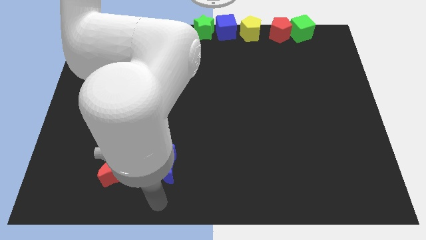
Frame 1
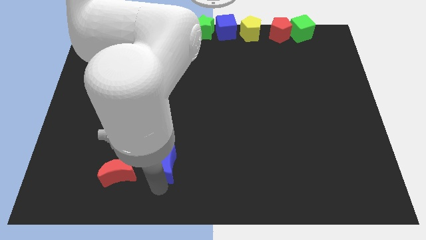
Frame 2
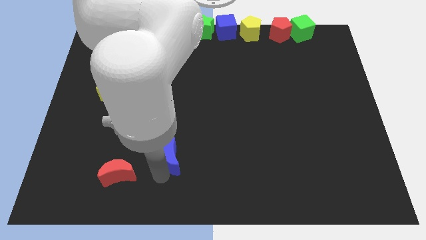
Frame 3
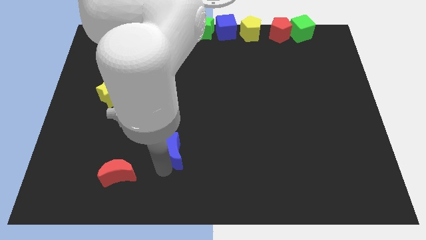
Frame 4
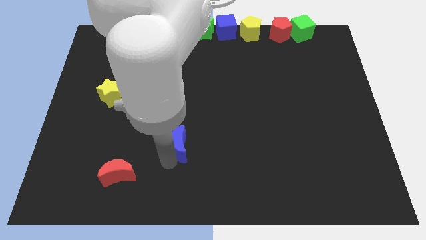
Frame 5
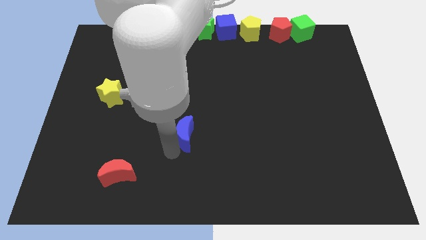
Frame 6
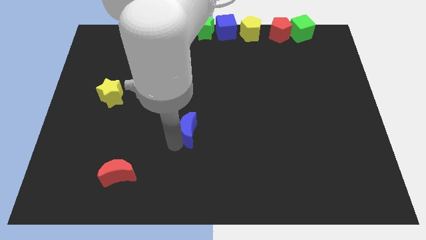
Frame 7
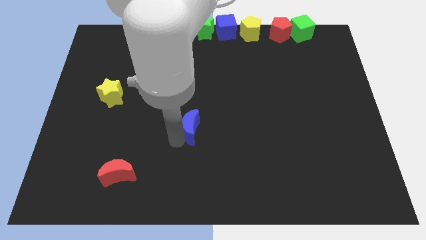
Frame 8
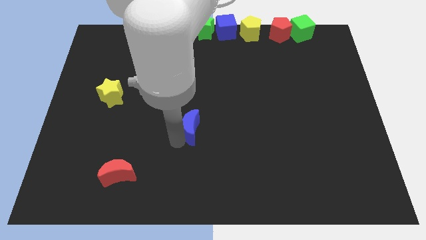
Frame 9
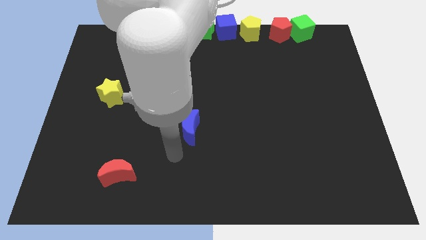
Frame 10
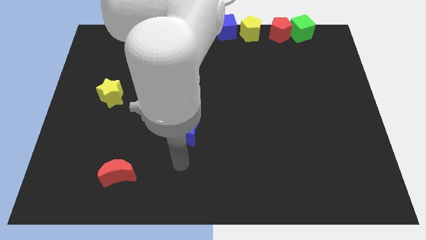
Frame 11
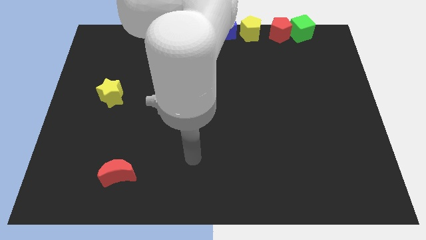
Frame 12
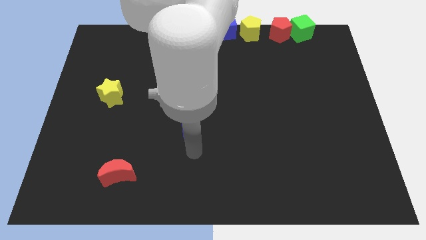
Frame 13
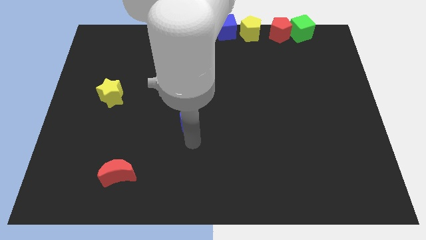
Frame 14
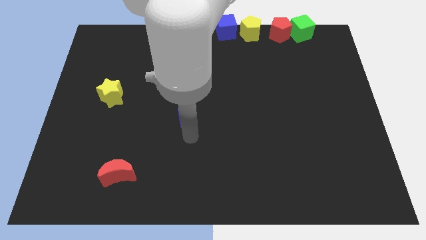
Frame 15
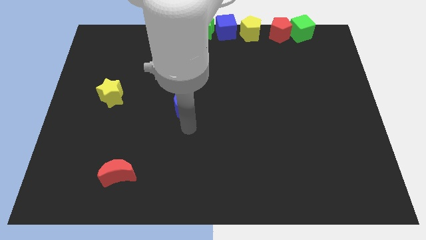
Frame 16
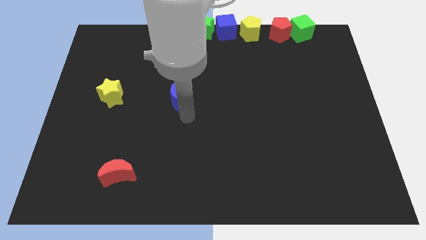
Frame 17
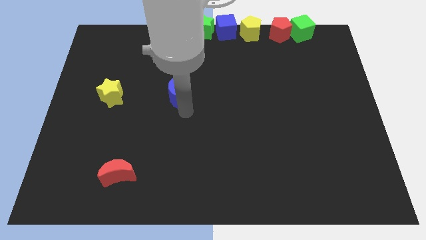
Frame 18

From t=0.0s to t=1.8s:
push the blue moon to the horizontal right of the yellow star

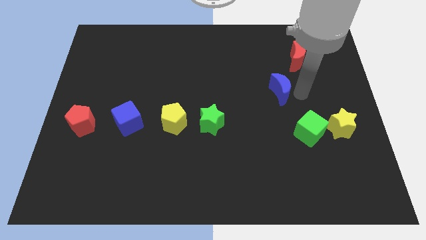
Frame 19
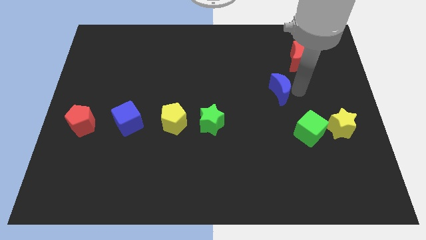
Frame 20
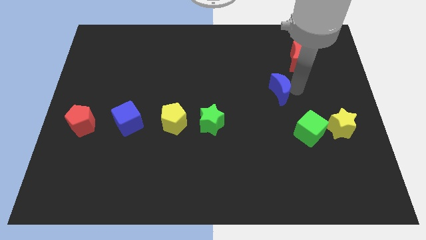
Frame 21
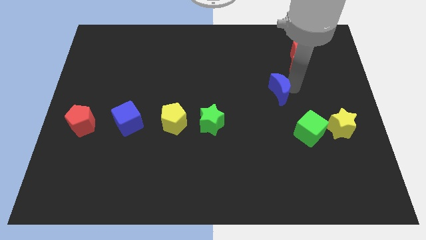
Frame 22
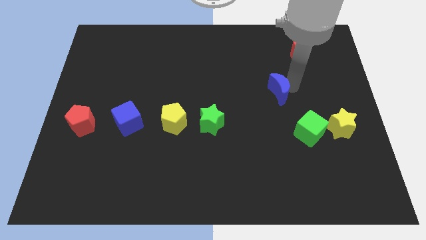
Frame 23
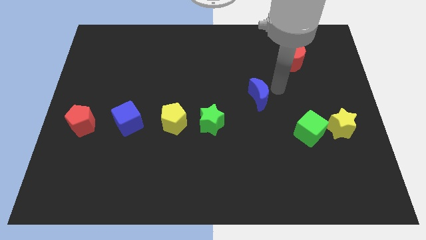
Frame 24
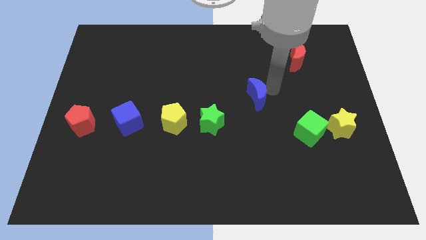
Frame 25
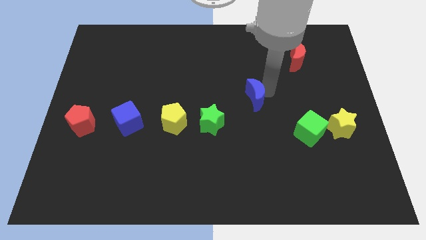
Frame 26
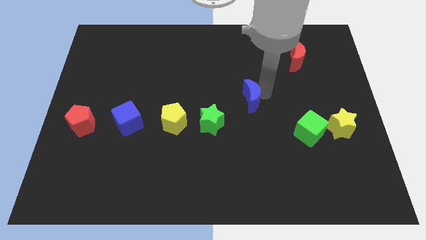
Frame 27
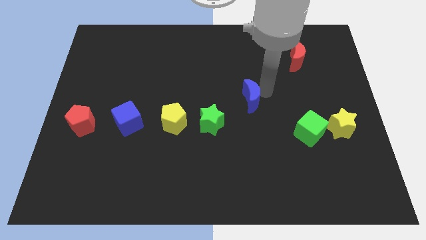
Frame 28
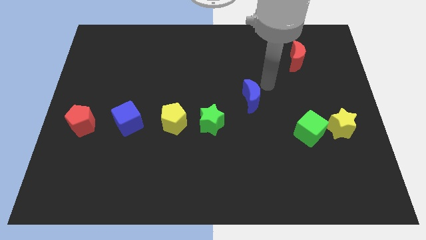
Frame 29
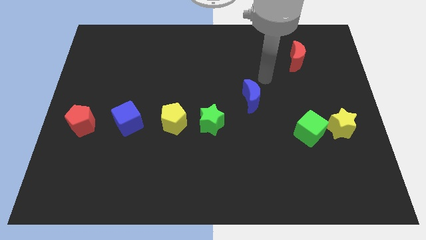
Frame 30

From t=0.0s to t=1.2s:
adjust the blue moon to the center of the red moon and green star

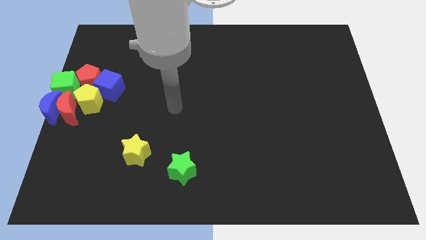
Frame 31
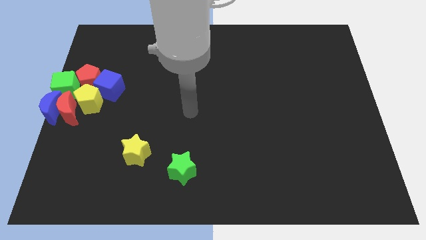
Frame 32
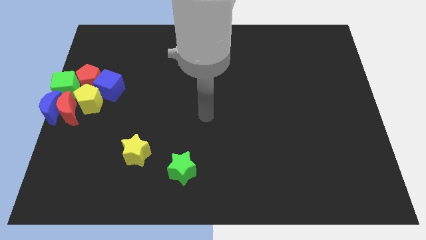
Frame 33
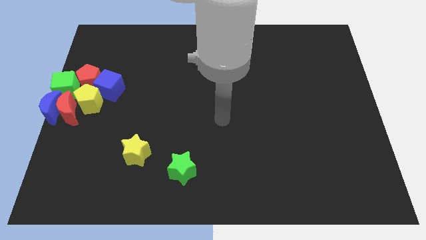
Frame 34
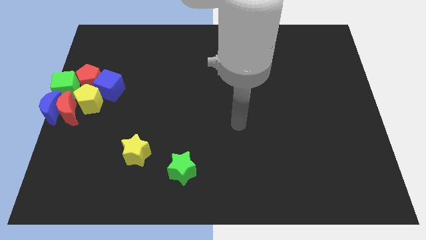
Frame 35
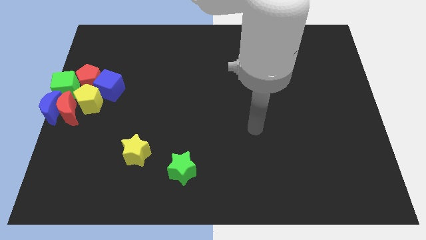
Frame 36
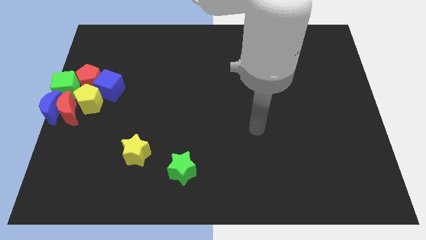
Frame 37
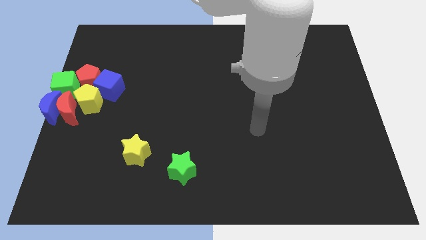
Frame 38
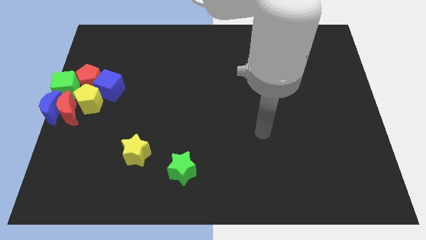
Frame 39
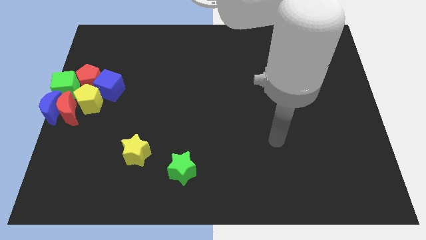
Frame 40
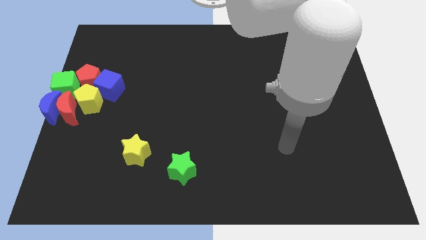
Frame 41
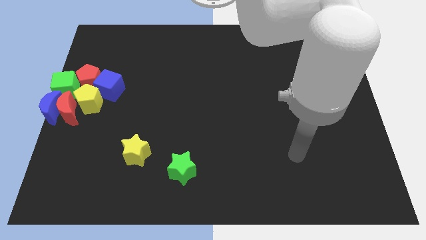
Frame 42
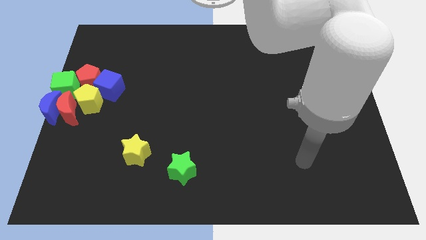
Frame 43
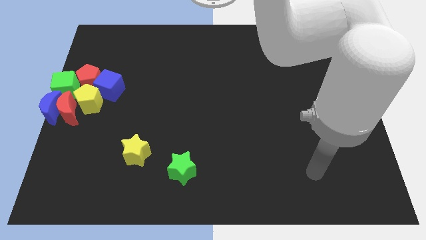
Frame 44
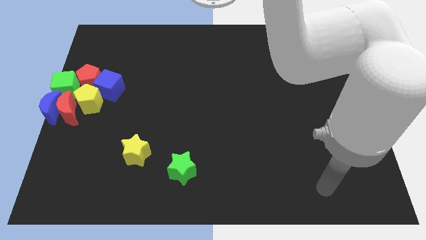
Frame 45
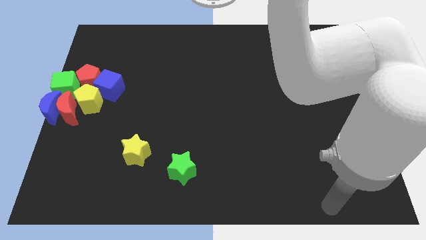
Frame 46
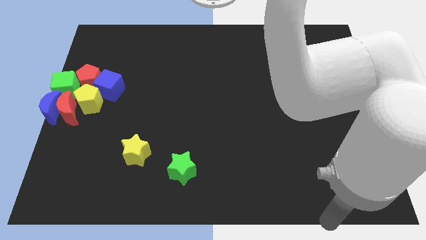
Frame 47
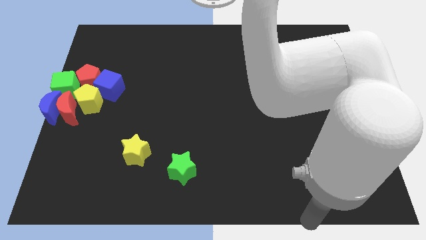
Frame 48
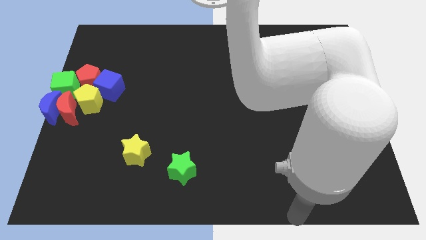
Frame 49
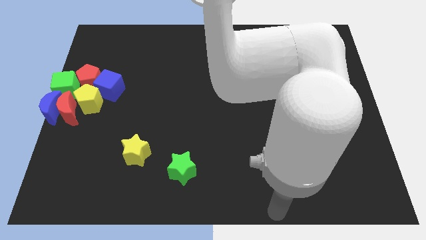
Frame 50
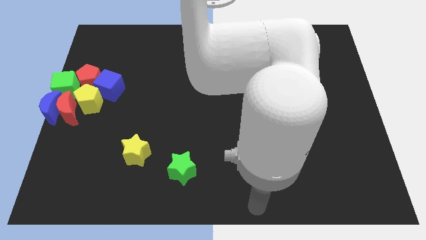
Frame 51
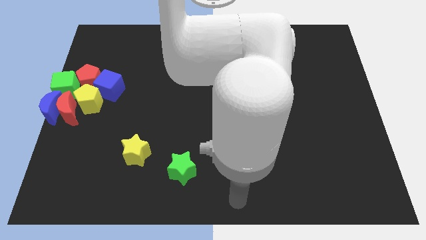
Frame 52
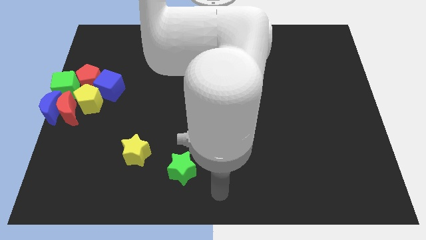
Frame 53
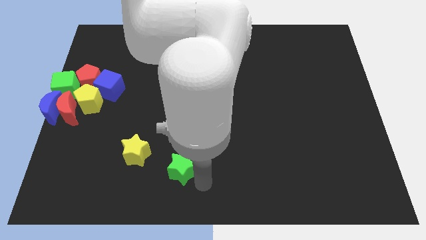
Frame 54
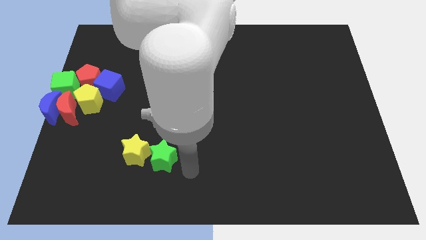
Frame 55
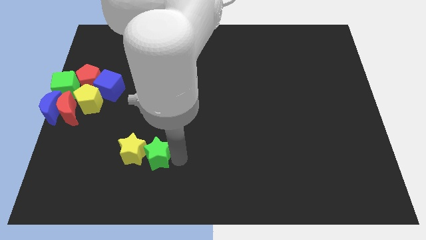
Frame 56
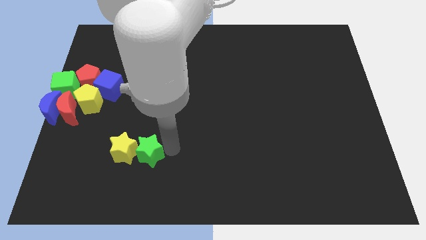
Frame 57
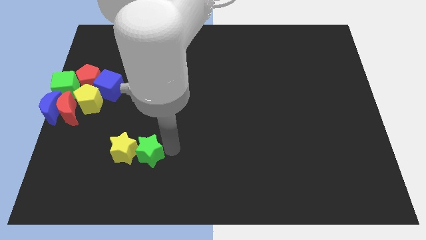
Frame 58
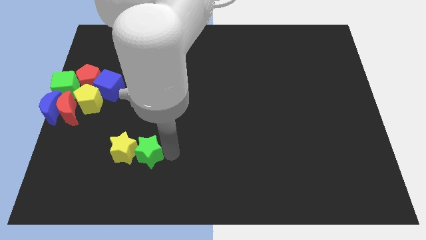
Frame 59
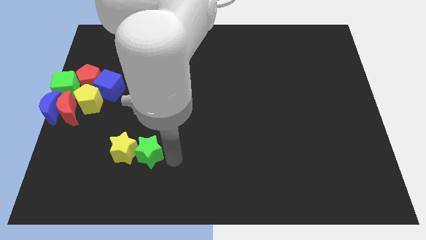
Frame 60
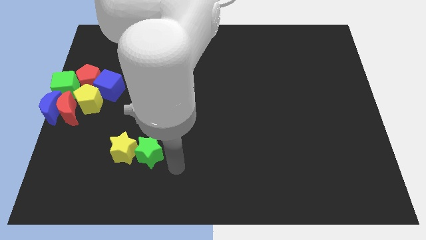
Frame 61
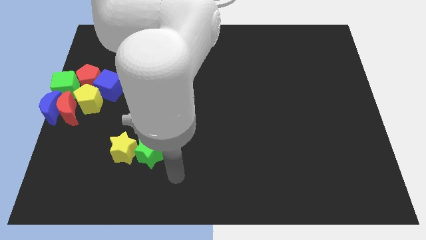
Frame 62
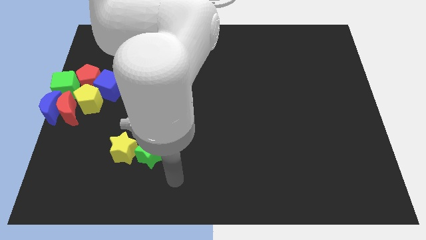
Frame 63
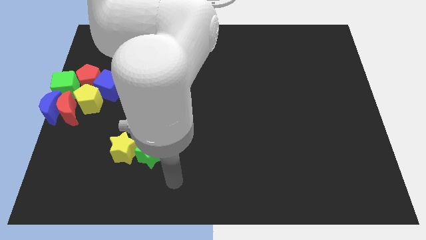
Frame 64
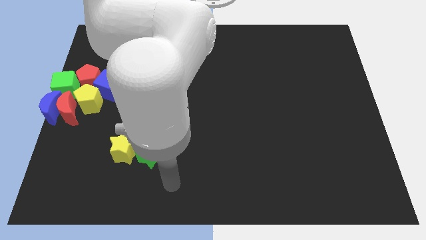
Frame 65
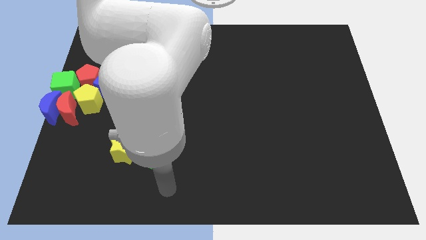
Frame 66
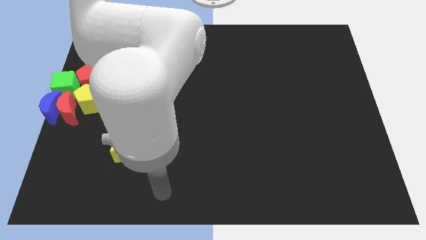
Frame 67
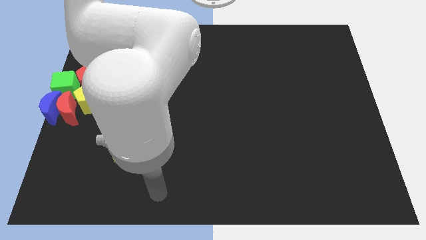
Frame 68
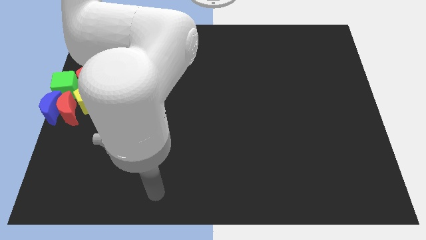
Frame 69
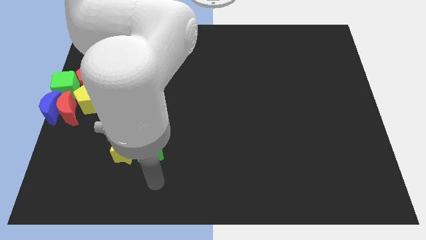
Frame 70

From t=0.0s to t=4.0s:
move the green star to the right of the yellow star

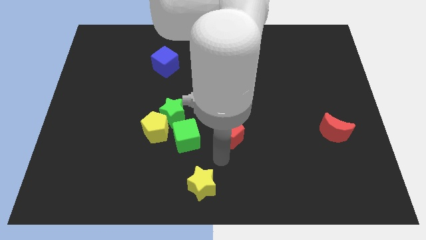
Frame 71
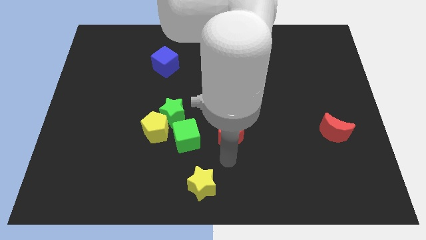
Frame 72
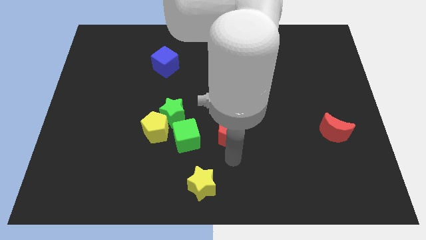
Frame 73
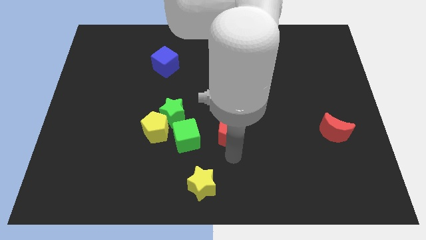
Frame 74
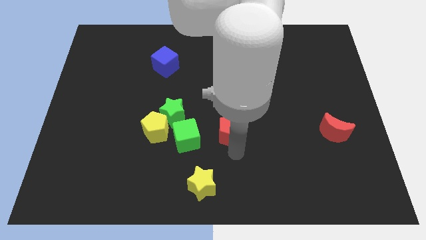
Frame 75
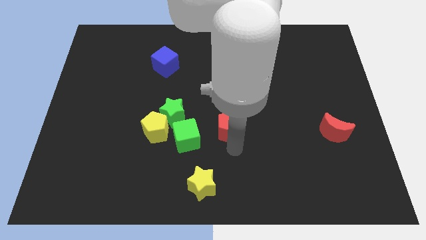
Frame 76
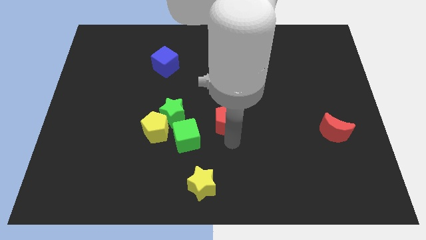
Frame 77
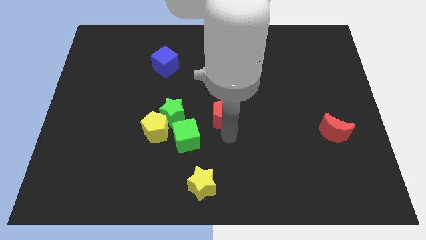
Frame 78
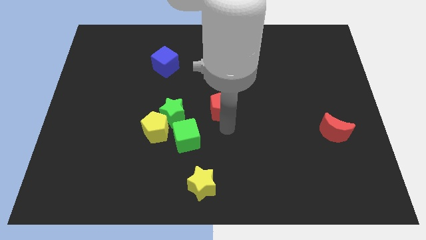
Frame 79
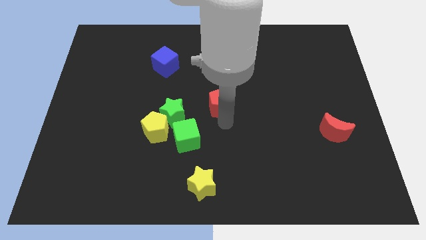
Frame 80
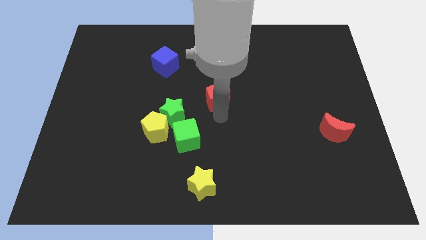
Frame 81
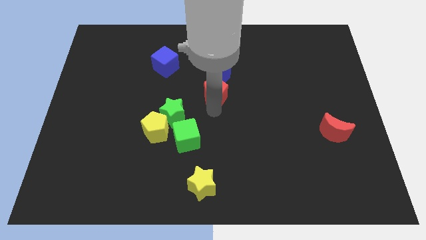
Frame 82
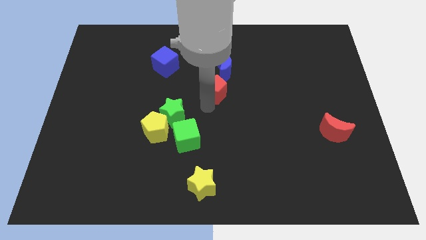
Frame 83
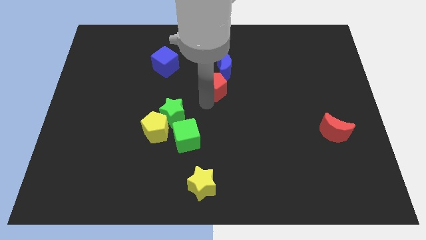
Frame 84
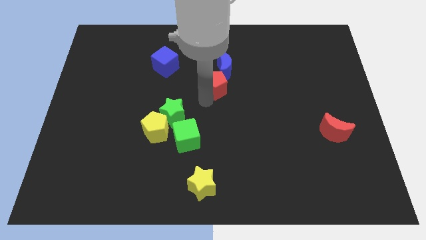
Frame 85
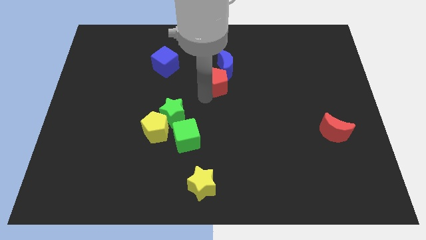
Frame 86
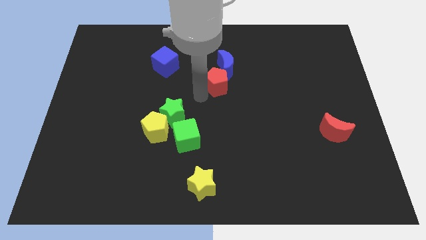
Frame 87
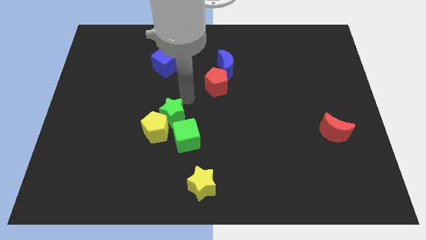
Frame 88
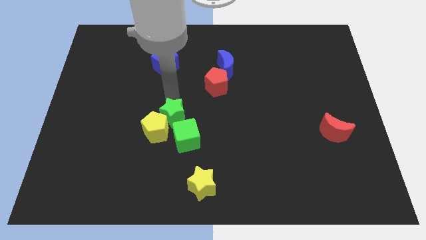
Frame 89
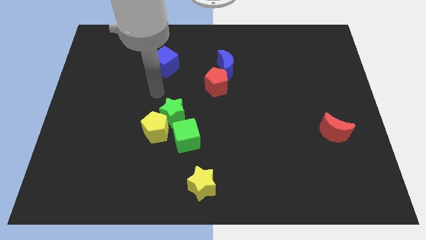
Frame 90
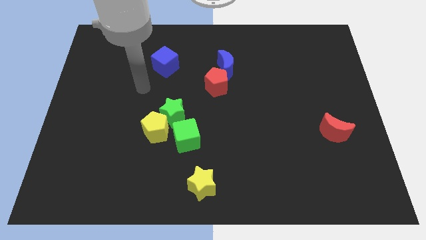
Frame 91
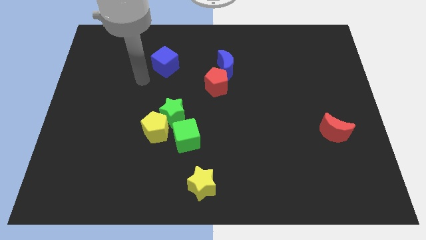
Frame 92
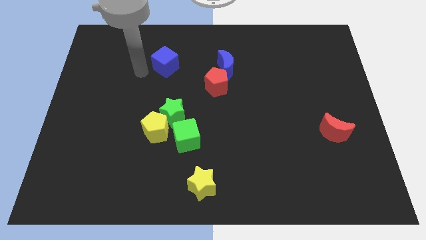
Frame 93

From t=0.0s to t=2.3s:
move red pentagon towards blue moon
